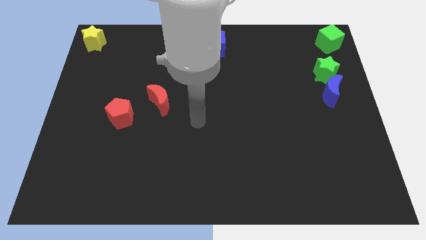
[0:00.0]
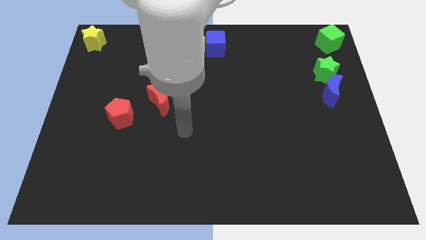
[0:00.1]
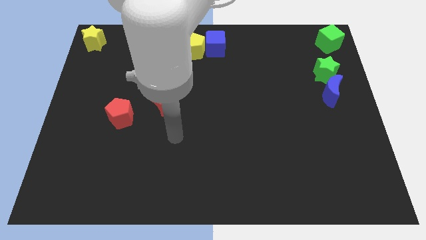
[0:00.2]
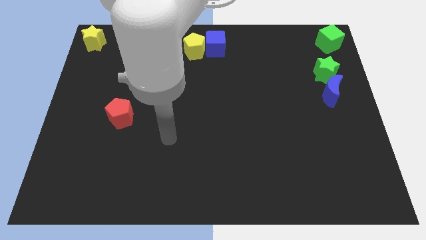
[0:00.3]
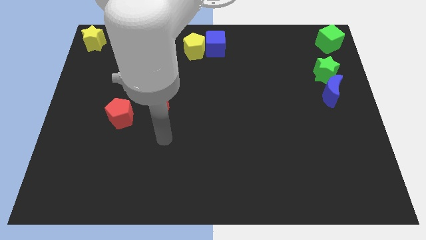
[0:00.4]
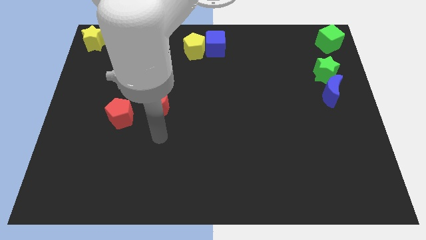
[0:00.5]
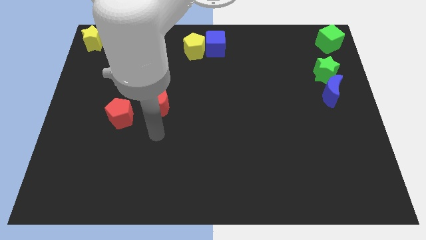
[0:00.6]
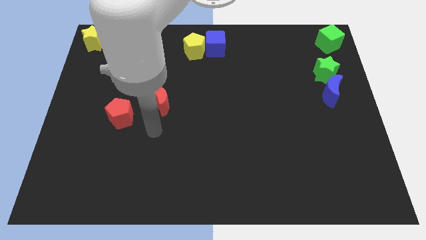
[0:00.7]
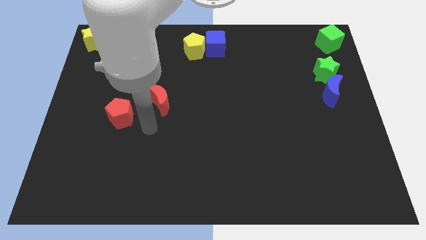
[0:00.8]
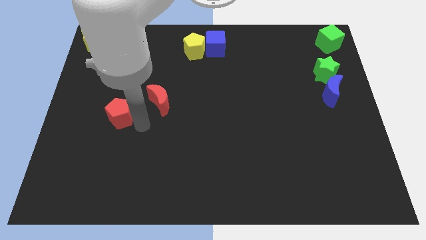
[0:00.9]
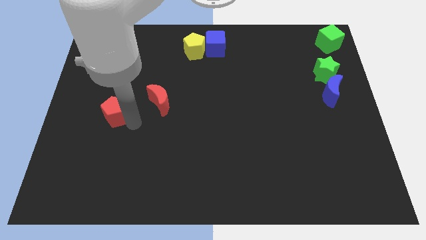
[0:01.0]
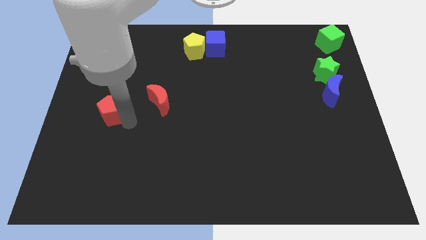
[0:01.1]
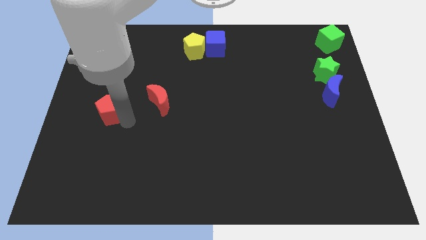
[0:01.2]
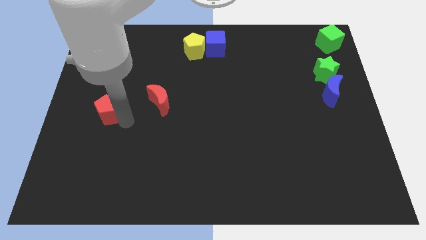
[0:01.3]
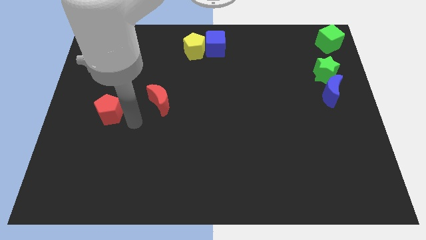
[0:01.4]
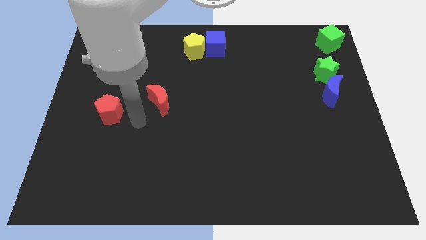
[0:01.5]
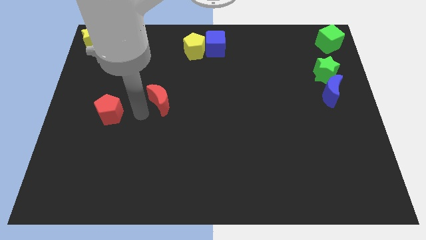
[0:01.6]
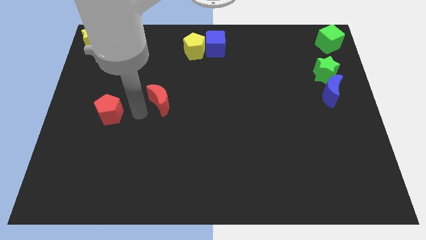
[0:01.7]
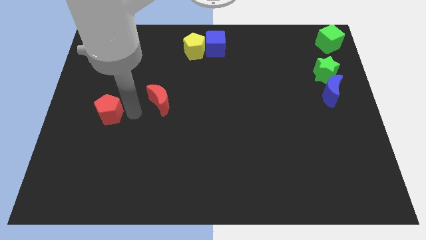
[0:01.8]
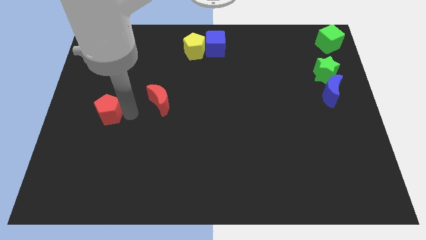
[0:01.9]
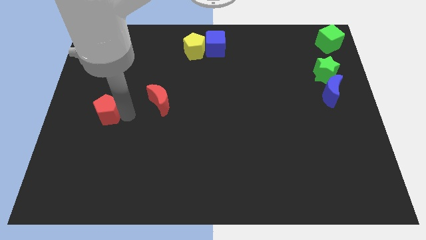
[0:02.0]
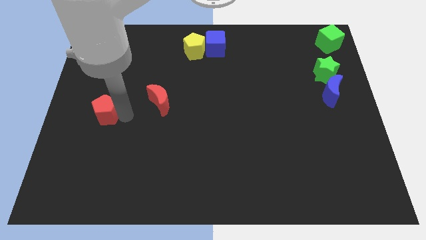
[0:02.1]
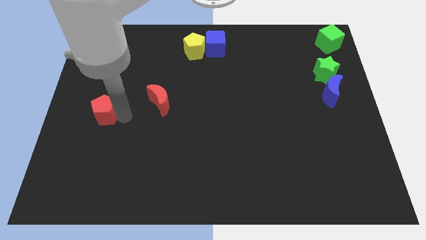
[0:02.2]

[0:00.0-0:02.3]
slide the red pentagon slightly to the left

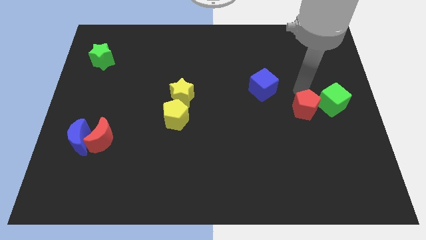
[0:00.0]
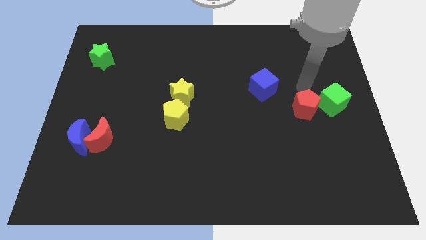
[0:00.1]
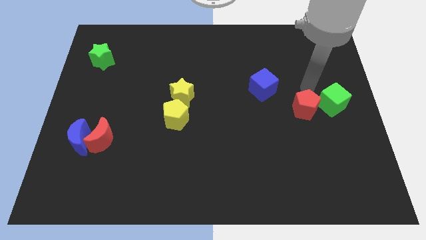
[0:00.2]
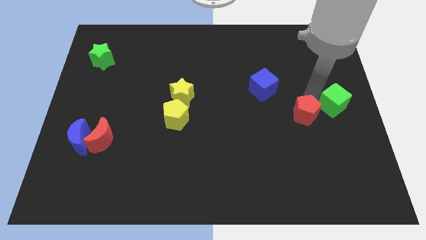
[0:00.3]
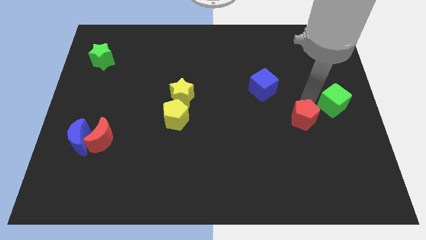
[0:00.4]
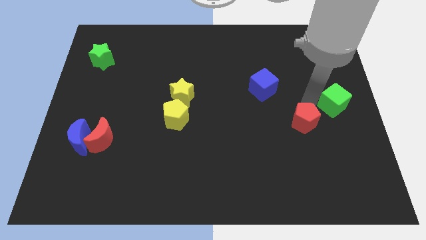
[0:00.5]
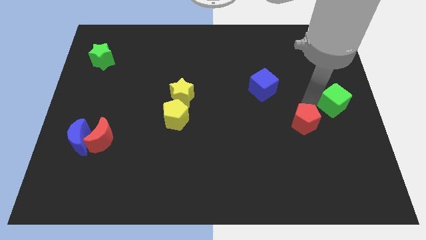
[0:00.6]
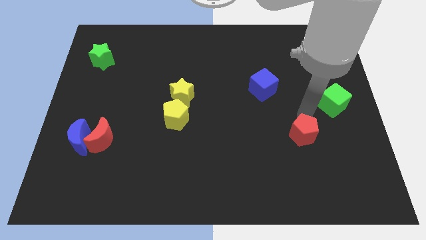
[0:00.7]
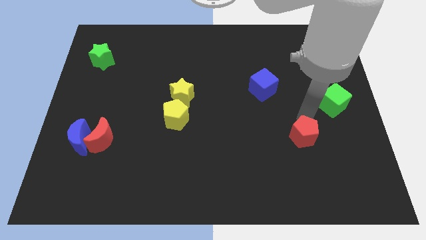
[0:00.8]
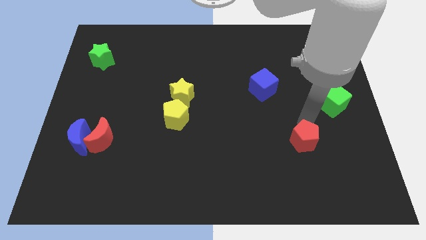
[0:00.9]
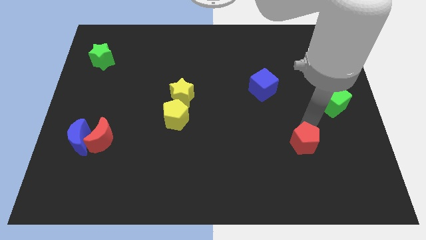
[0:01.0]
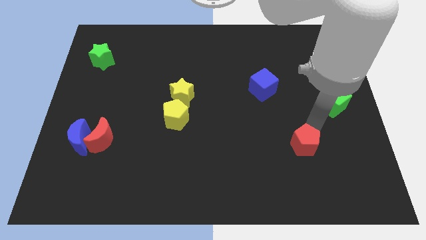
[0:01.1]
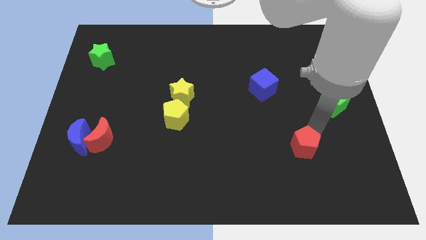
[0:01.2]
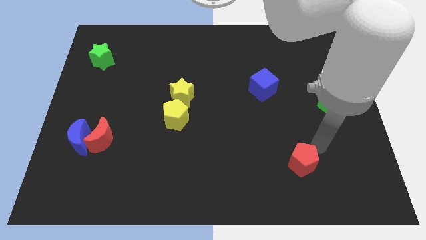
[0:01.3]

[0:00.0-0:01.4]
push the red pentagon towards the bottom side

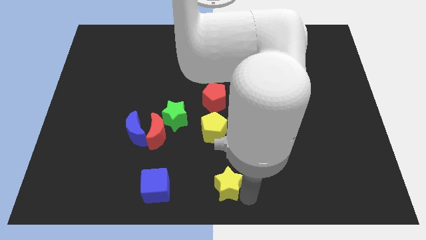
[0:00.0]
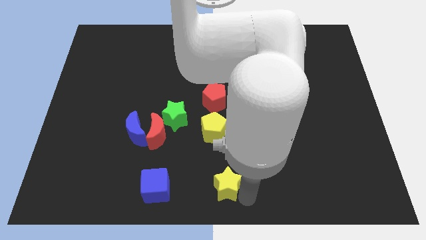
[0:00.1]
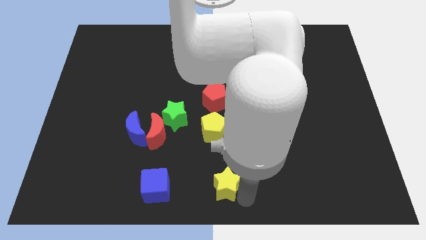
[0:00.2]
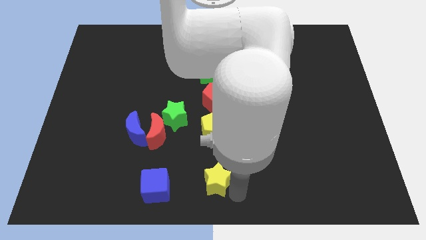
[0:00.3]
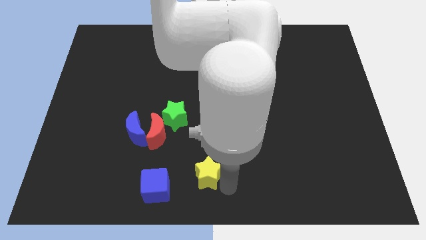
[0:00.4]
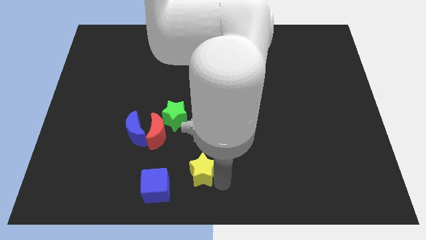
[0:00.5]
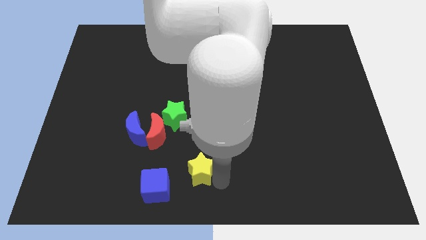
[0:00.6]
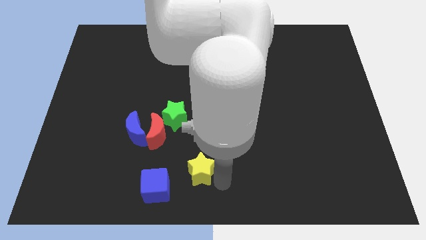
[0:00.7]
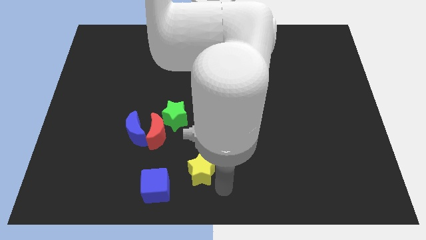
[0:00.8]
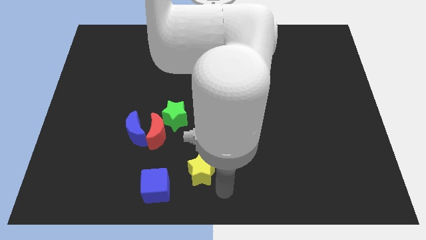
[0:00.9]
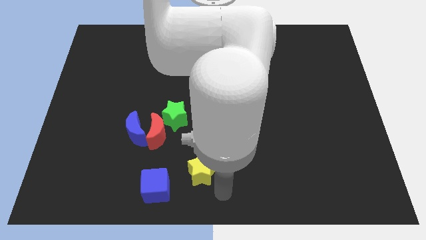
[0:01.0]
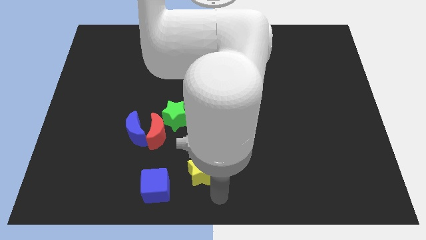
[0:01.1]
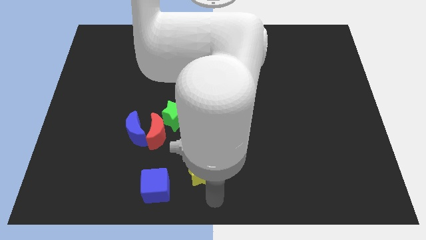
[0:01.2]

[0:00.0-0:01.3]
move the yellow star parallel to the right of the blue cube

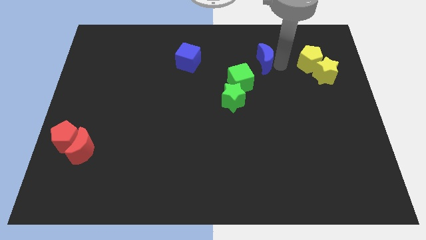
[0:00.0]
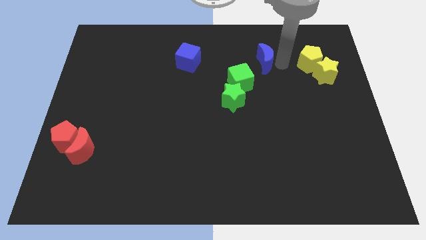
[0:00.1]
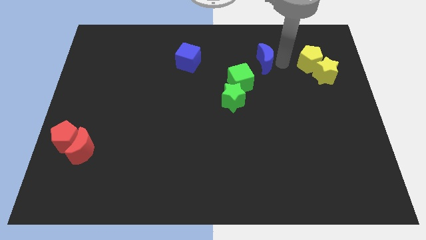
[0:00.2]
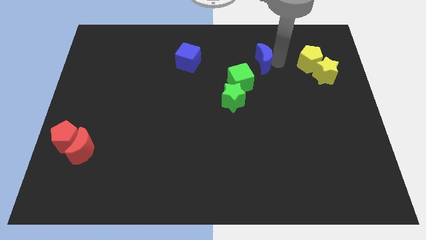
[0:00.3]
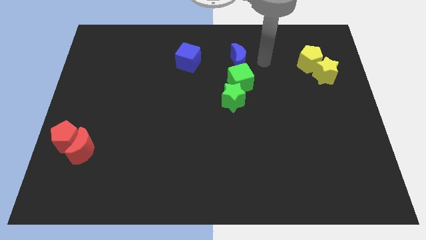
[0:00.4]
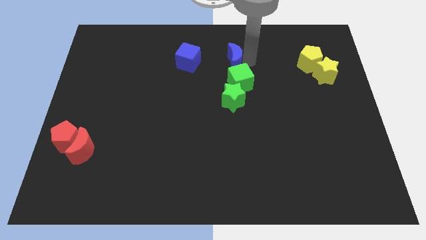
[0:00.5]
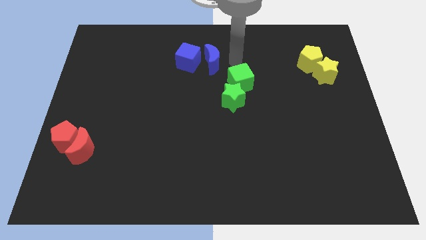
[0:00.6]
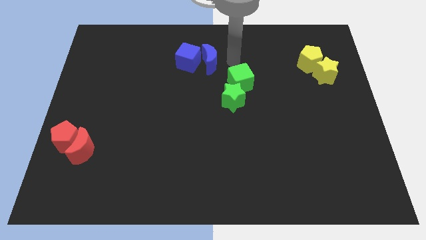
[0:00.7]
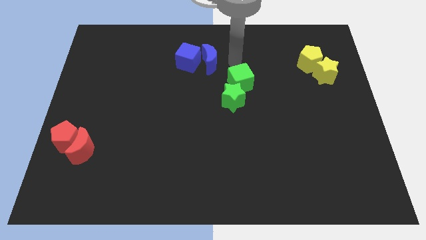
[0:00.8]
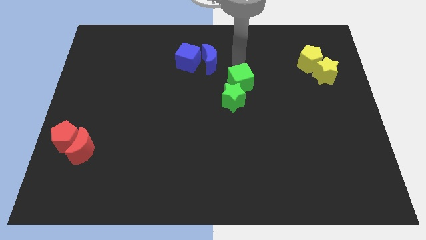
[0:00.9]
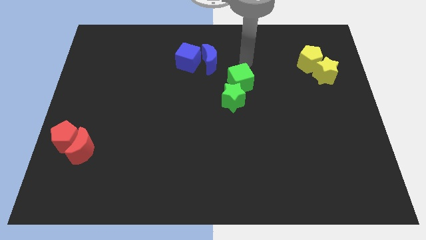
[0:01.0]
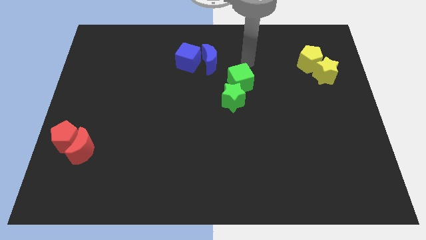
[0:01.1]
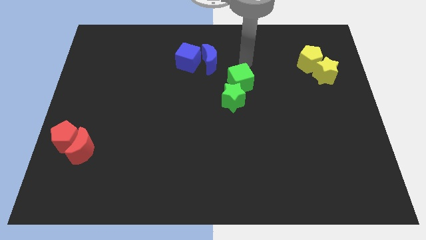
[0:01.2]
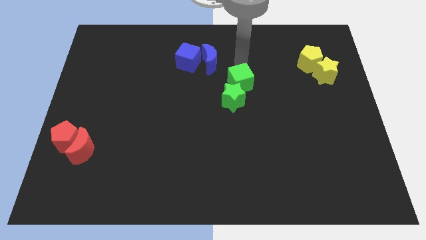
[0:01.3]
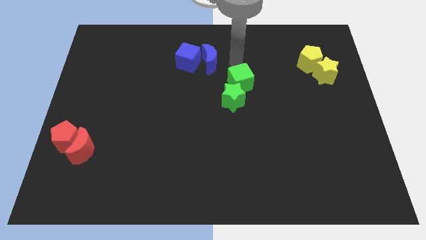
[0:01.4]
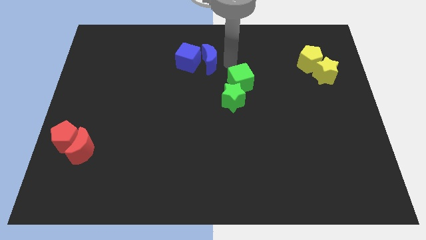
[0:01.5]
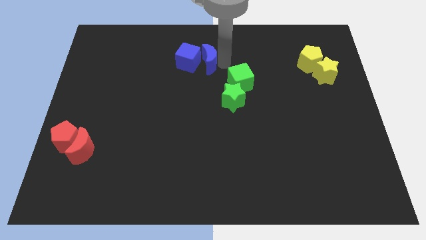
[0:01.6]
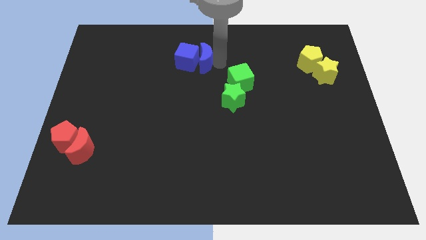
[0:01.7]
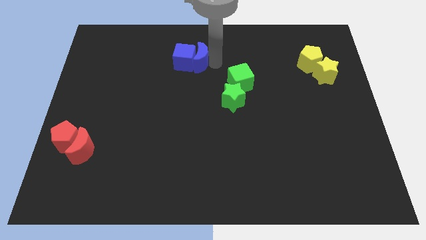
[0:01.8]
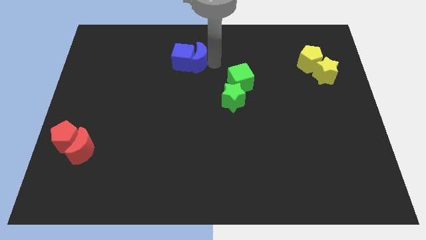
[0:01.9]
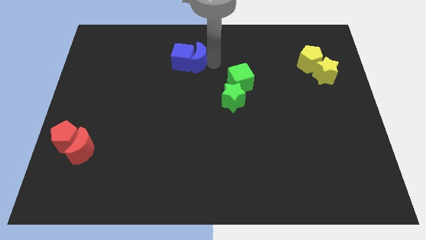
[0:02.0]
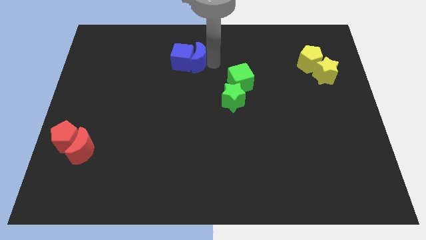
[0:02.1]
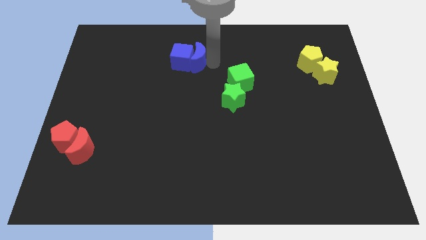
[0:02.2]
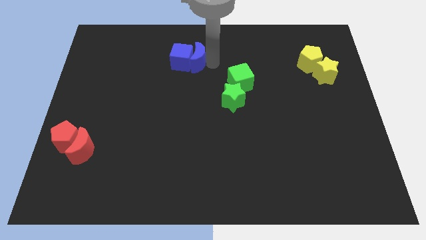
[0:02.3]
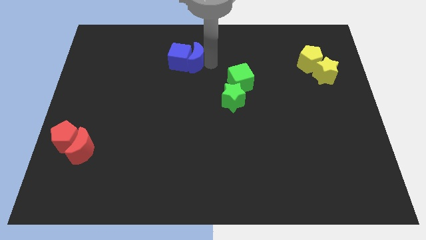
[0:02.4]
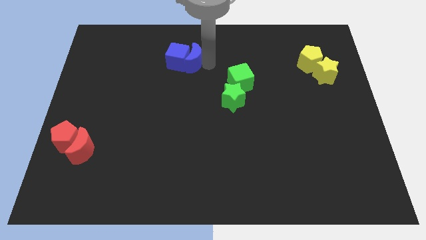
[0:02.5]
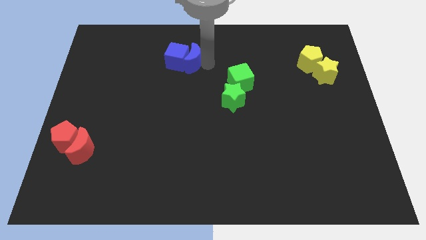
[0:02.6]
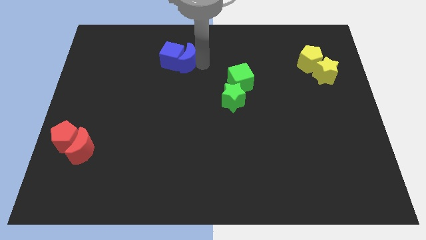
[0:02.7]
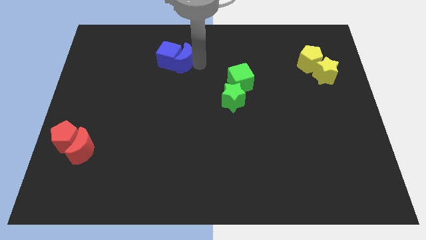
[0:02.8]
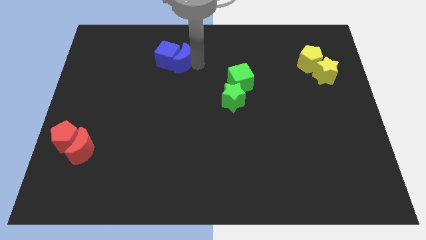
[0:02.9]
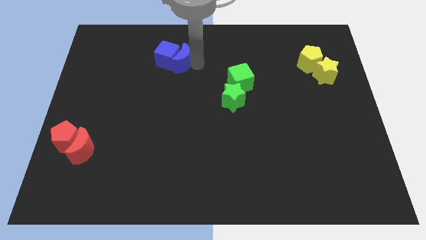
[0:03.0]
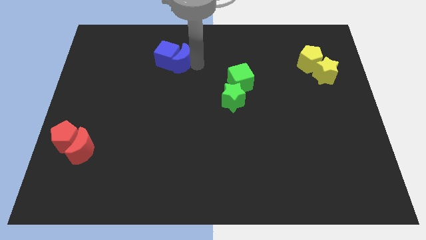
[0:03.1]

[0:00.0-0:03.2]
move blue moon into blue cube

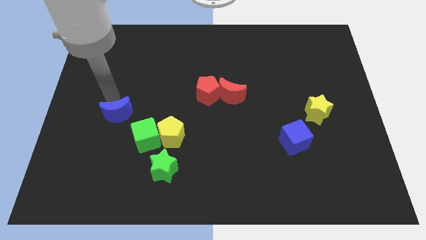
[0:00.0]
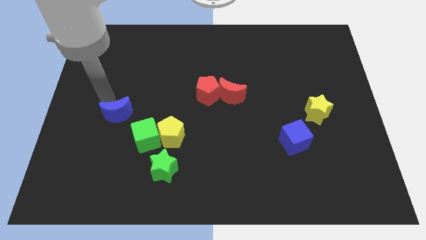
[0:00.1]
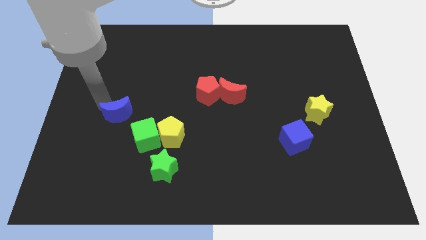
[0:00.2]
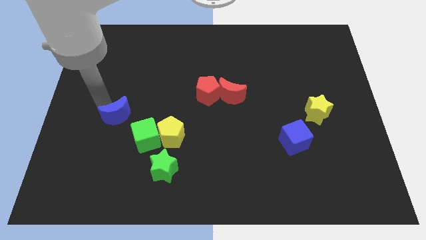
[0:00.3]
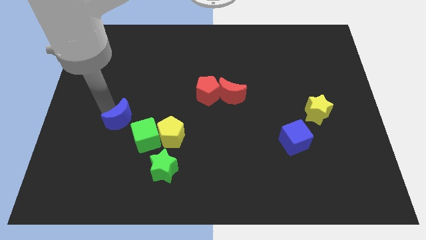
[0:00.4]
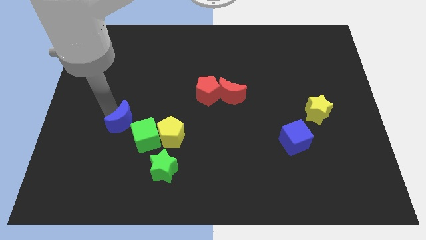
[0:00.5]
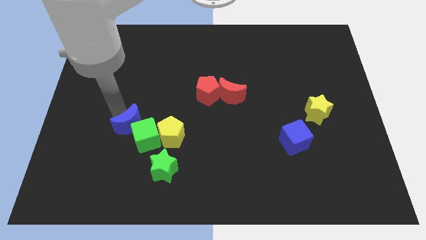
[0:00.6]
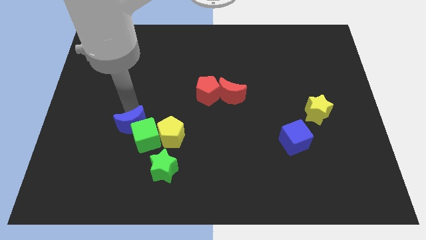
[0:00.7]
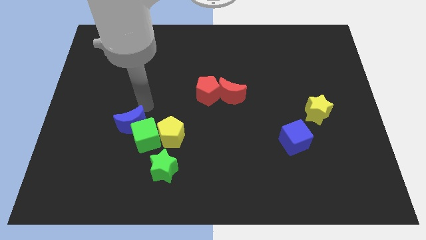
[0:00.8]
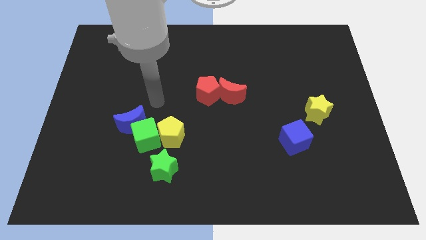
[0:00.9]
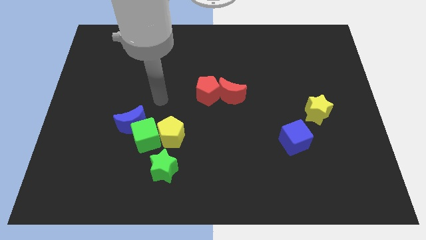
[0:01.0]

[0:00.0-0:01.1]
move the blue crescent close to the green cube
